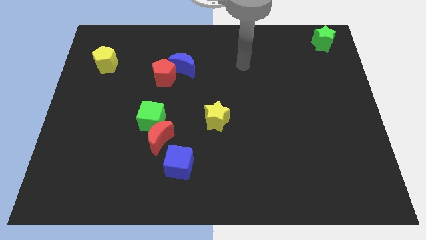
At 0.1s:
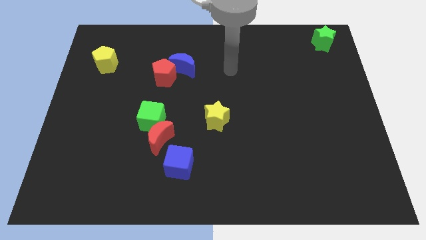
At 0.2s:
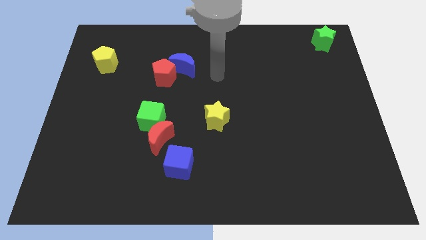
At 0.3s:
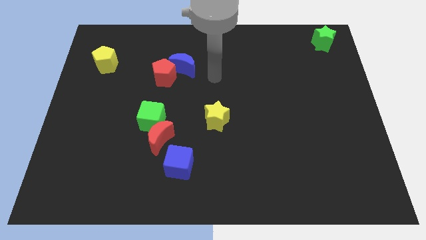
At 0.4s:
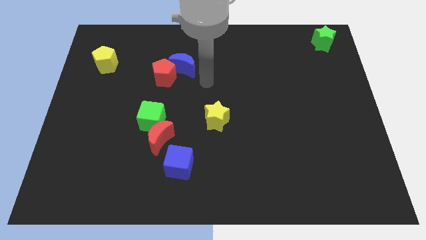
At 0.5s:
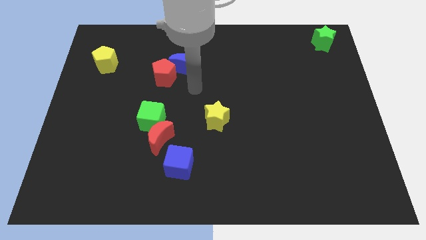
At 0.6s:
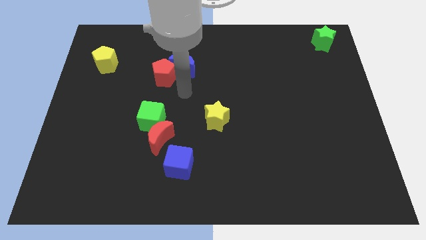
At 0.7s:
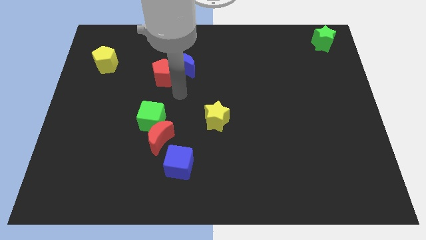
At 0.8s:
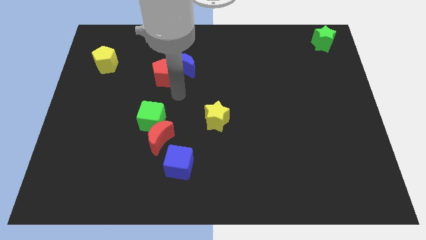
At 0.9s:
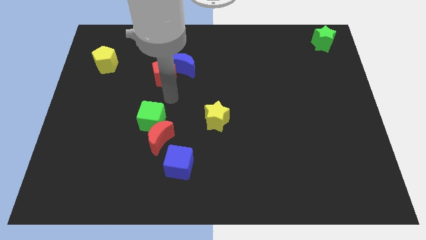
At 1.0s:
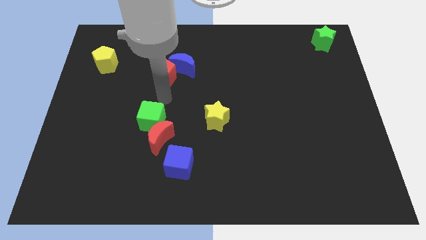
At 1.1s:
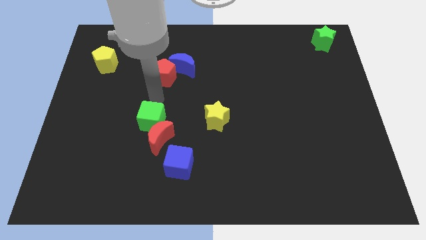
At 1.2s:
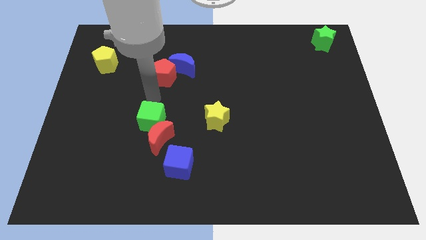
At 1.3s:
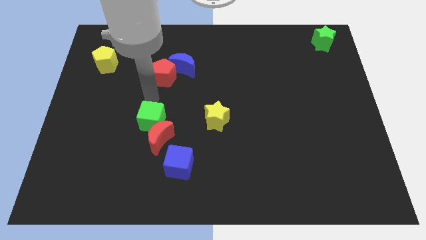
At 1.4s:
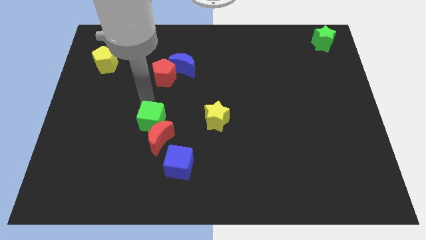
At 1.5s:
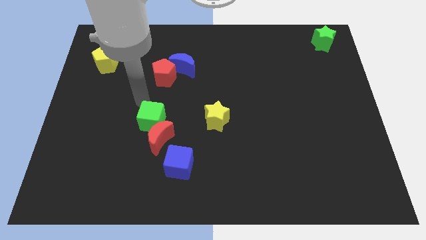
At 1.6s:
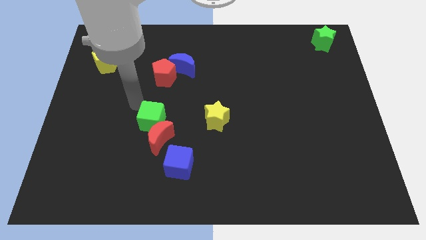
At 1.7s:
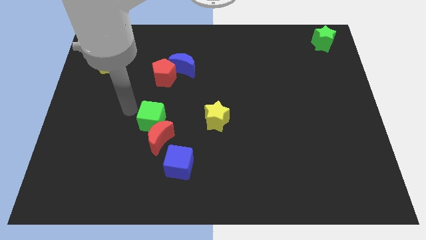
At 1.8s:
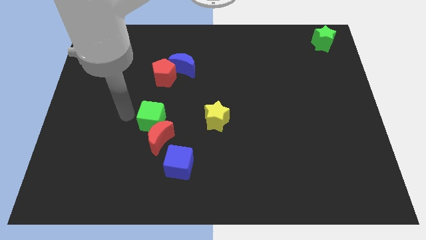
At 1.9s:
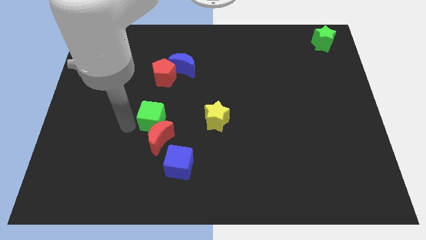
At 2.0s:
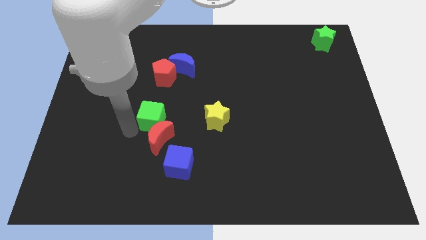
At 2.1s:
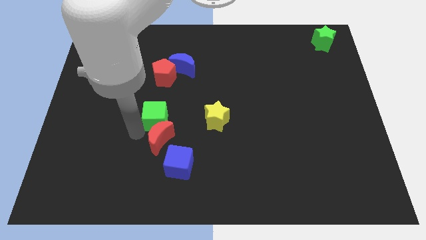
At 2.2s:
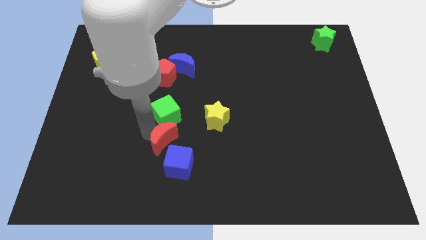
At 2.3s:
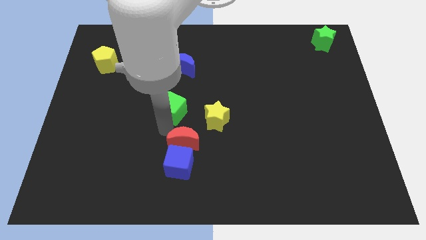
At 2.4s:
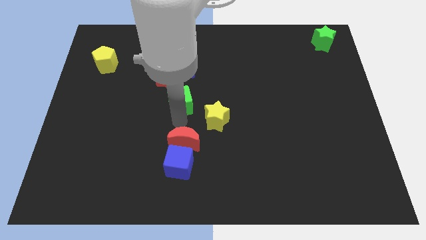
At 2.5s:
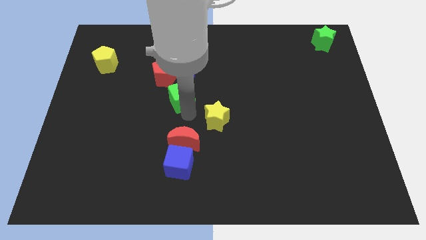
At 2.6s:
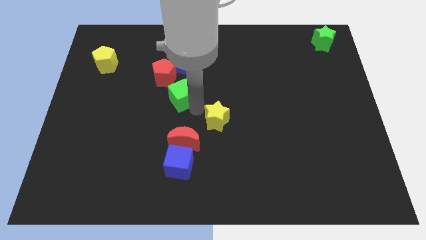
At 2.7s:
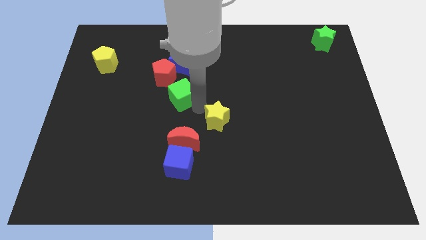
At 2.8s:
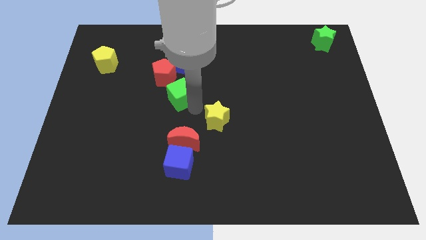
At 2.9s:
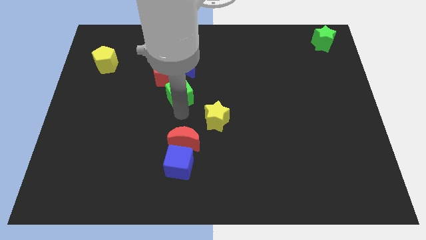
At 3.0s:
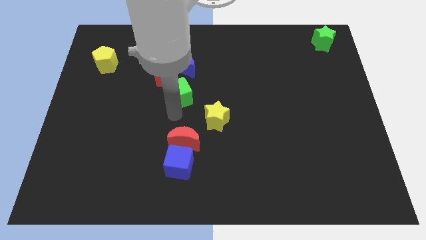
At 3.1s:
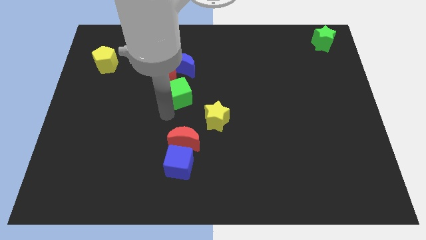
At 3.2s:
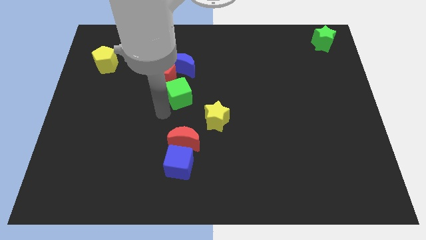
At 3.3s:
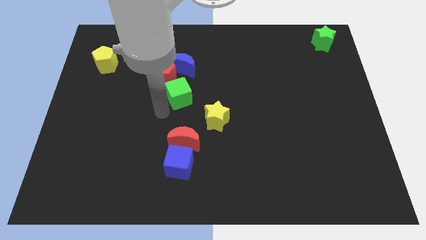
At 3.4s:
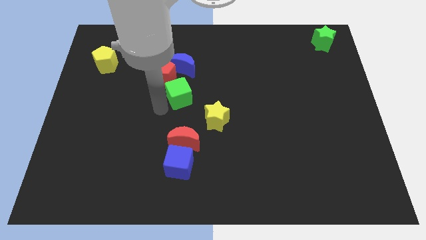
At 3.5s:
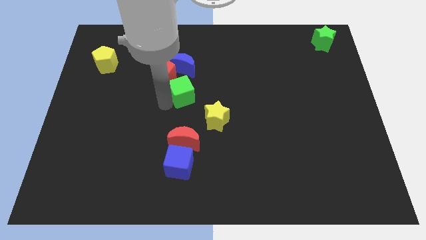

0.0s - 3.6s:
separate the green cube and the red moon

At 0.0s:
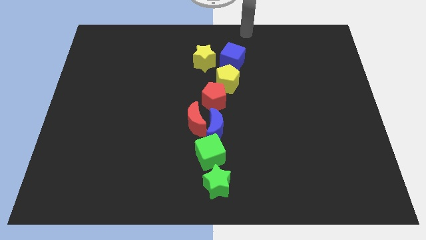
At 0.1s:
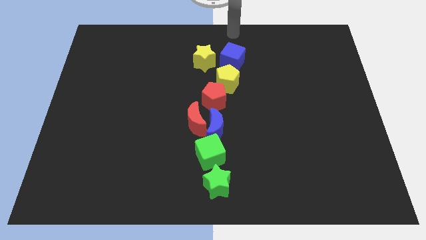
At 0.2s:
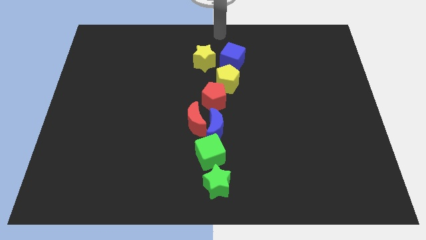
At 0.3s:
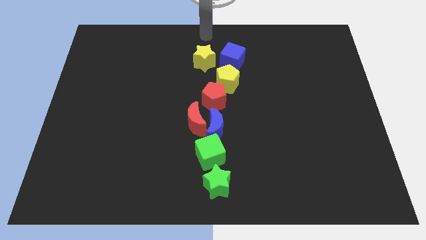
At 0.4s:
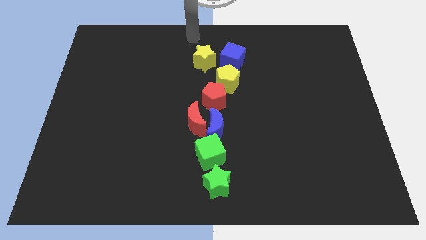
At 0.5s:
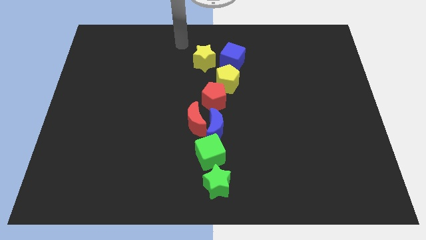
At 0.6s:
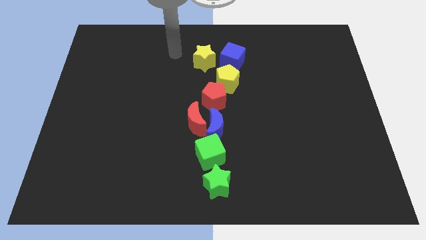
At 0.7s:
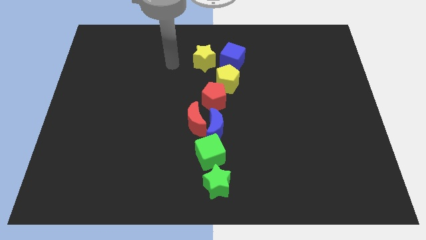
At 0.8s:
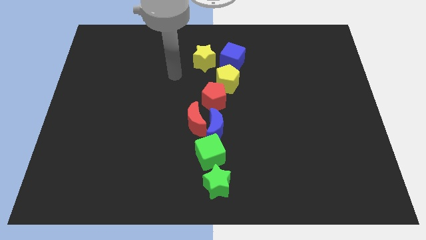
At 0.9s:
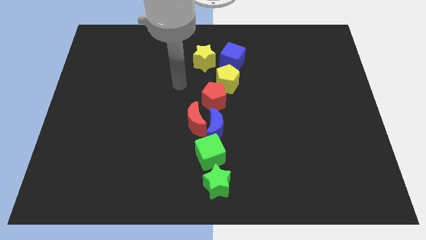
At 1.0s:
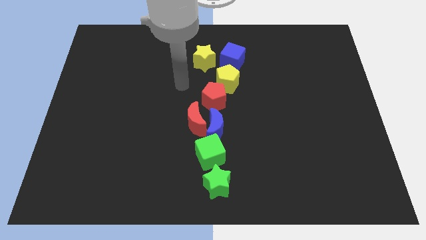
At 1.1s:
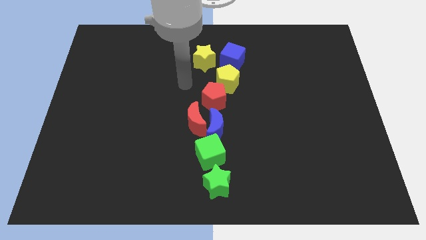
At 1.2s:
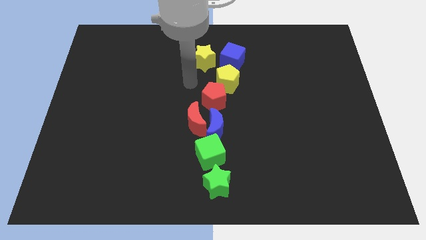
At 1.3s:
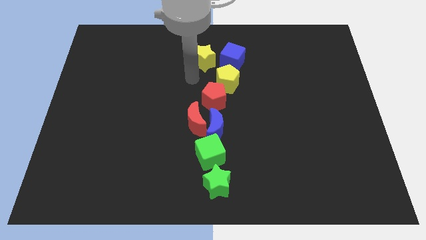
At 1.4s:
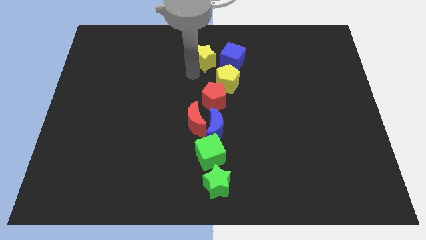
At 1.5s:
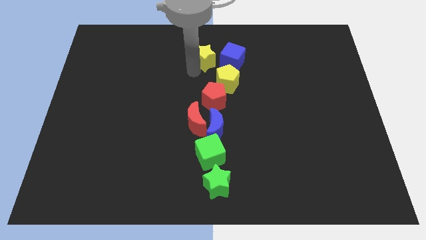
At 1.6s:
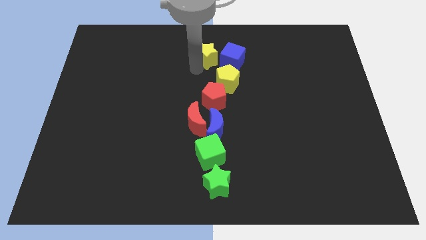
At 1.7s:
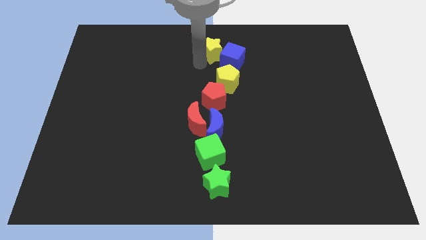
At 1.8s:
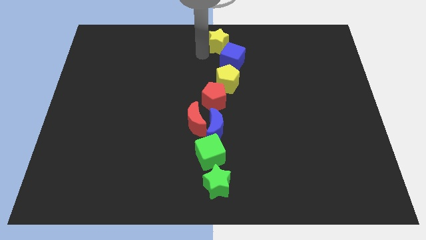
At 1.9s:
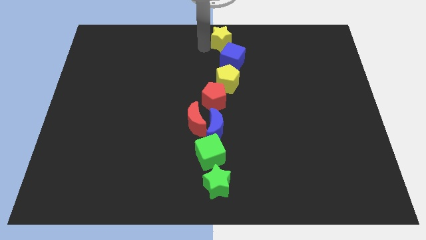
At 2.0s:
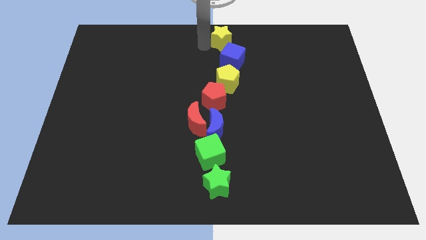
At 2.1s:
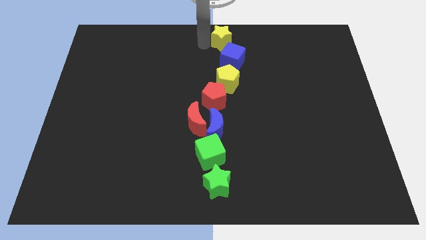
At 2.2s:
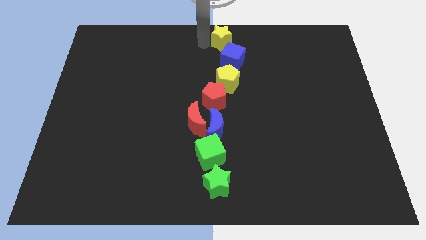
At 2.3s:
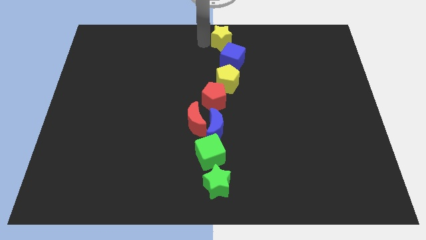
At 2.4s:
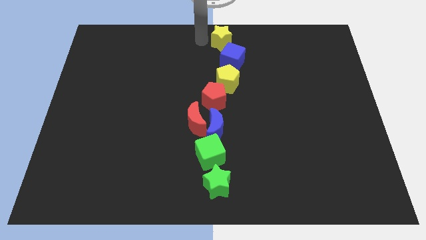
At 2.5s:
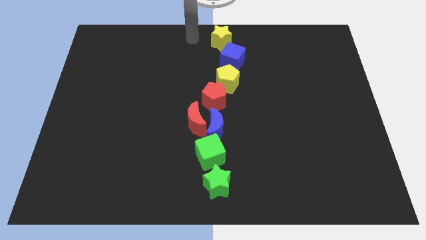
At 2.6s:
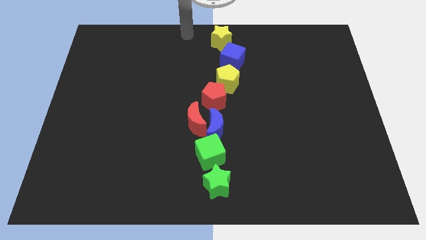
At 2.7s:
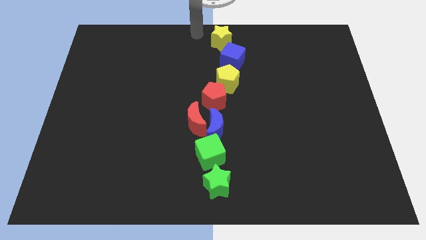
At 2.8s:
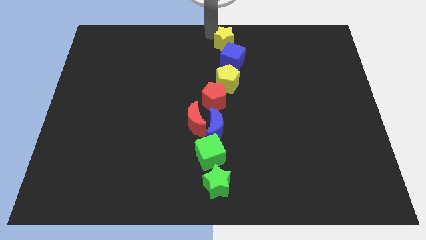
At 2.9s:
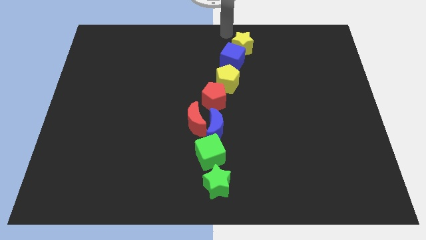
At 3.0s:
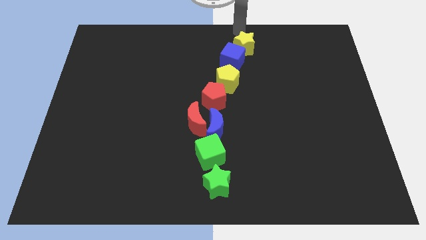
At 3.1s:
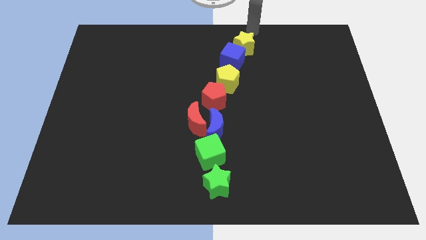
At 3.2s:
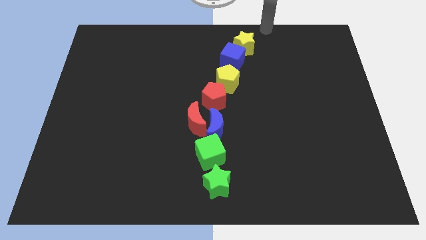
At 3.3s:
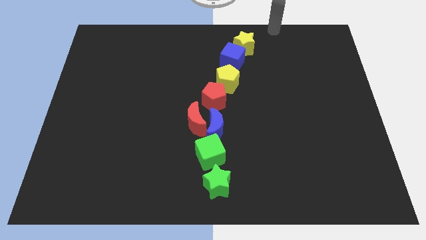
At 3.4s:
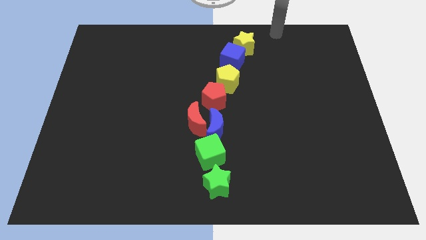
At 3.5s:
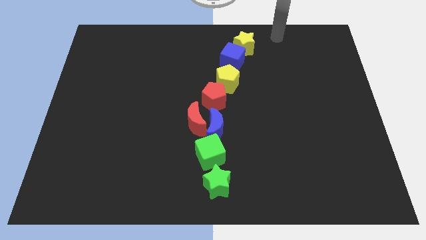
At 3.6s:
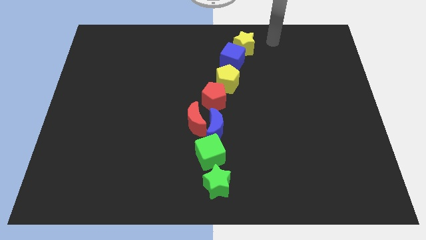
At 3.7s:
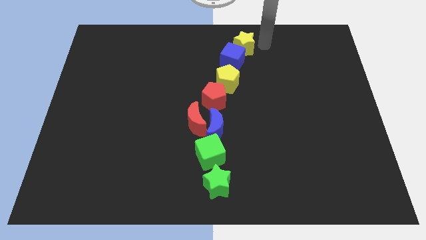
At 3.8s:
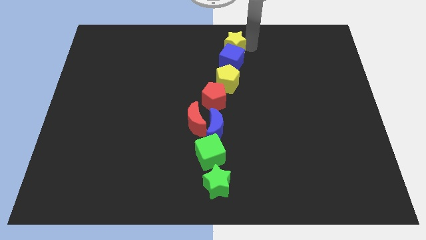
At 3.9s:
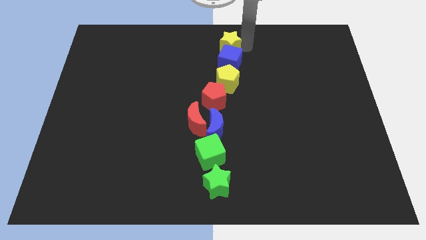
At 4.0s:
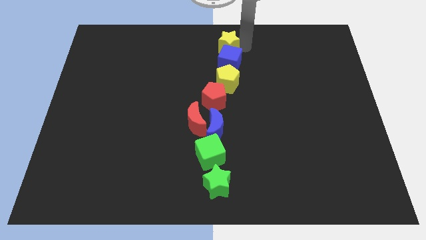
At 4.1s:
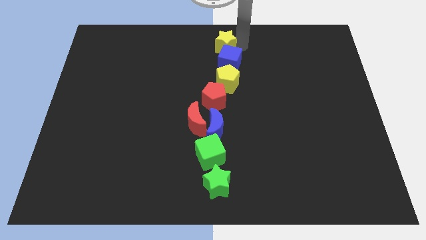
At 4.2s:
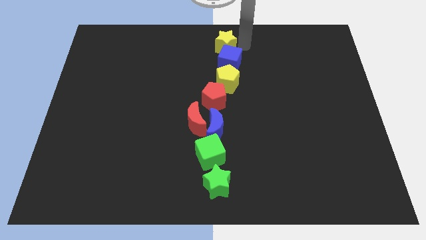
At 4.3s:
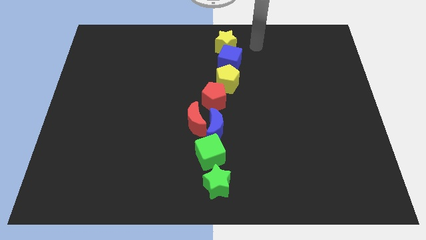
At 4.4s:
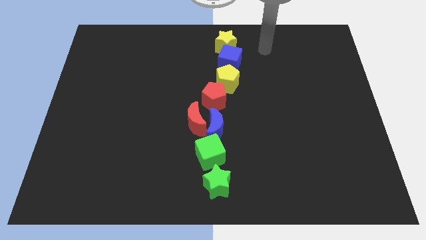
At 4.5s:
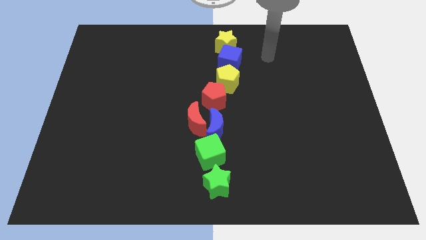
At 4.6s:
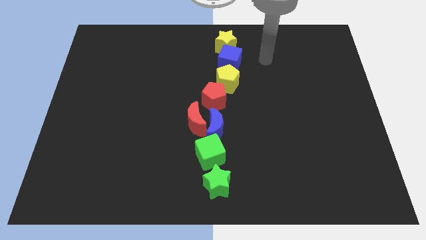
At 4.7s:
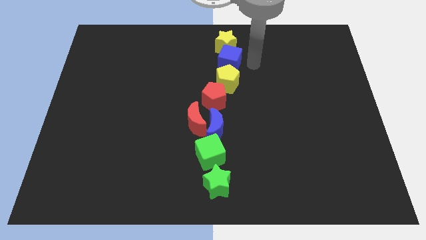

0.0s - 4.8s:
place the yellow star at the top side of the blue cube

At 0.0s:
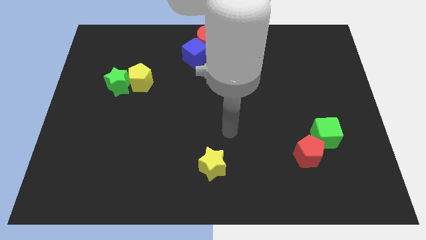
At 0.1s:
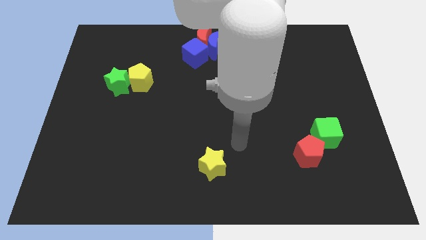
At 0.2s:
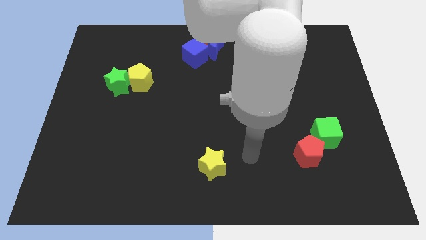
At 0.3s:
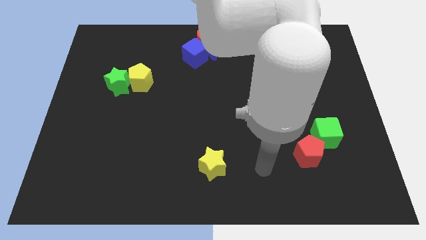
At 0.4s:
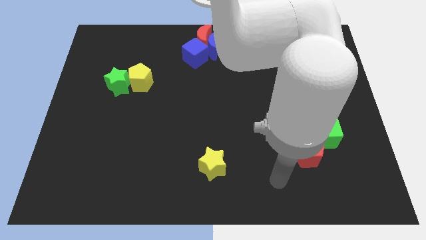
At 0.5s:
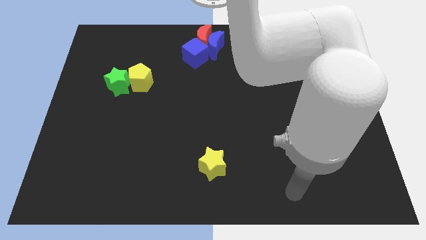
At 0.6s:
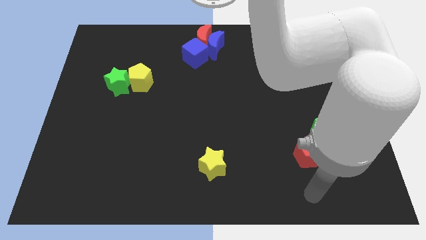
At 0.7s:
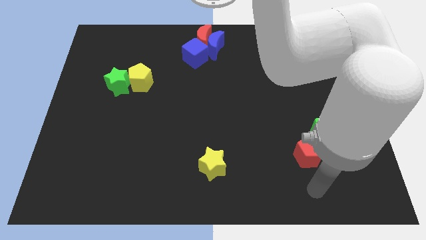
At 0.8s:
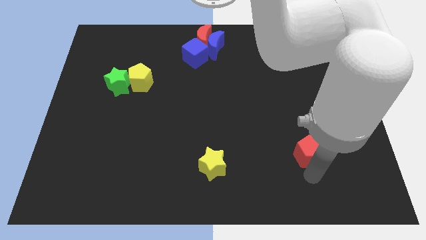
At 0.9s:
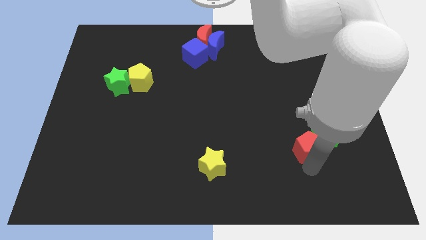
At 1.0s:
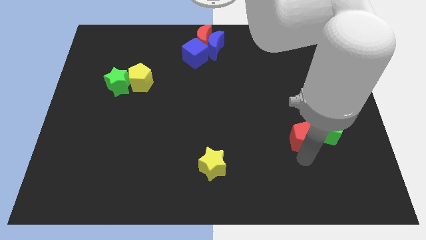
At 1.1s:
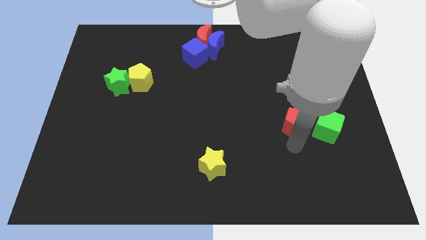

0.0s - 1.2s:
move the red pentagon to the left of the green cube
